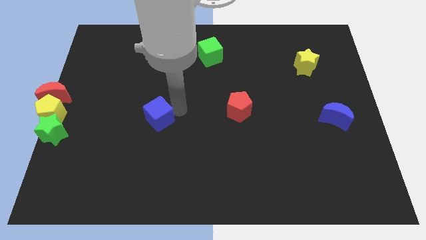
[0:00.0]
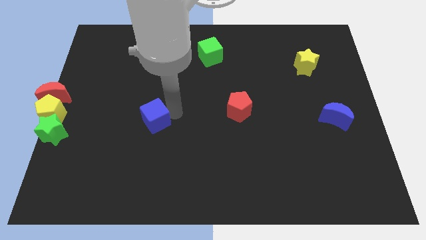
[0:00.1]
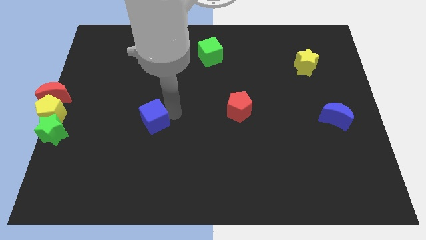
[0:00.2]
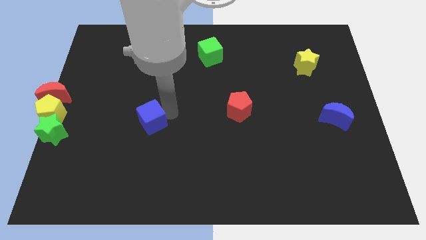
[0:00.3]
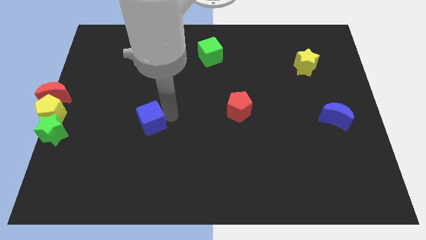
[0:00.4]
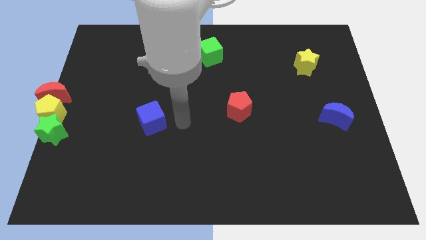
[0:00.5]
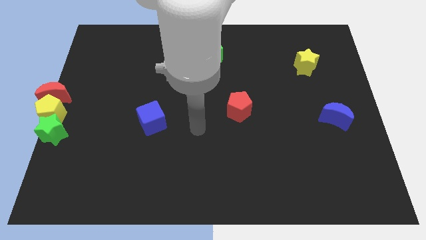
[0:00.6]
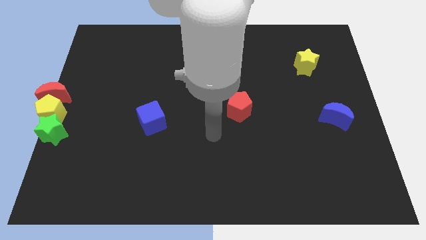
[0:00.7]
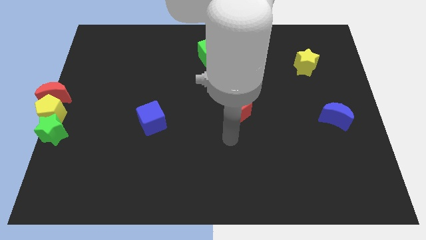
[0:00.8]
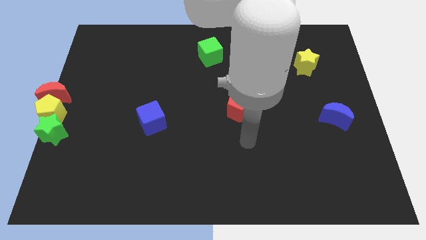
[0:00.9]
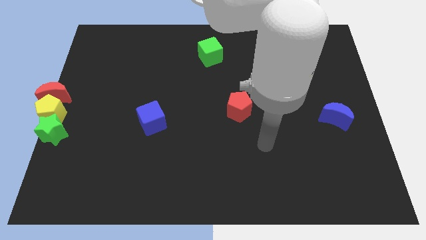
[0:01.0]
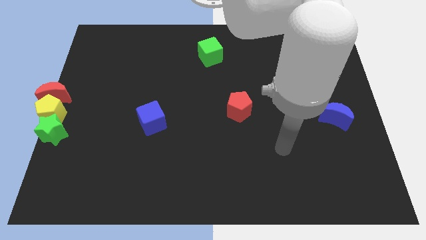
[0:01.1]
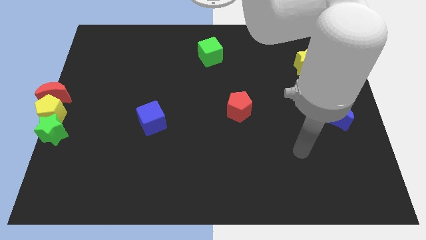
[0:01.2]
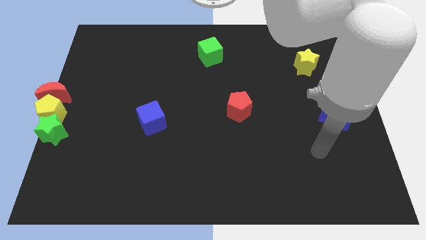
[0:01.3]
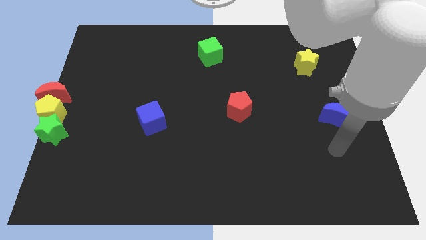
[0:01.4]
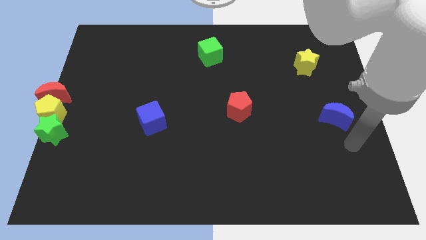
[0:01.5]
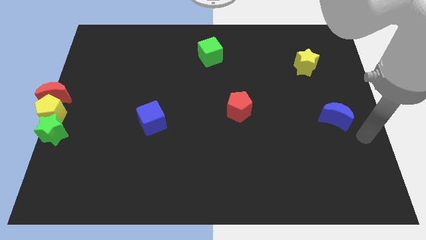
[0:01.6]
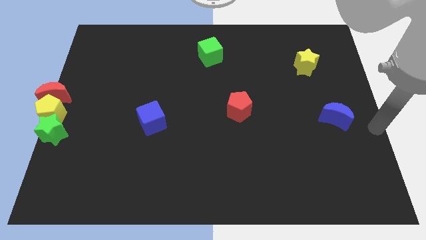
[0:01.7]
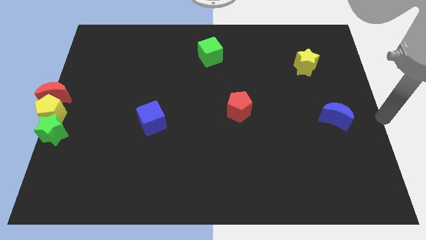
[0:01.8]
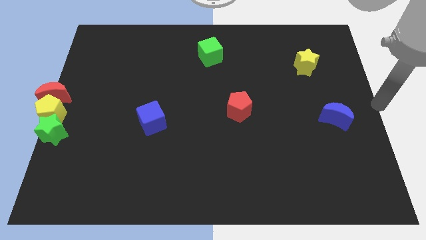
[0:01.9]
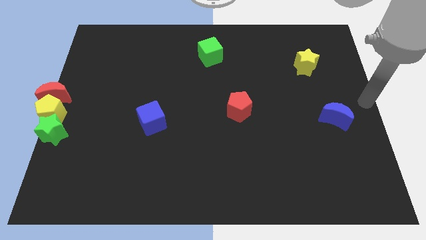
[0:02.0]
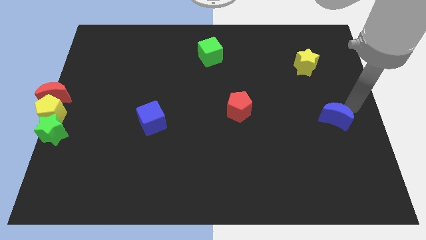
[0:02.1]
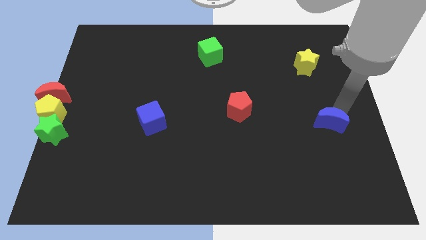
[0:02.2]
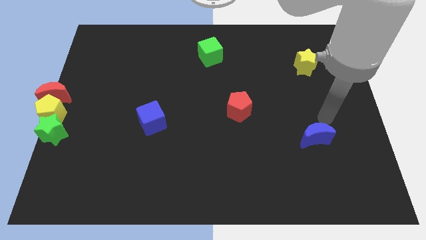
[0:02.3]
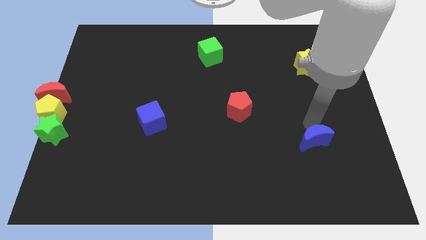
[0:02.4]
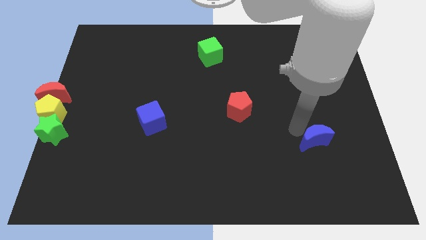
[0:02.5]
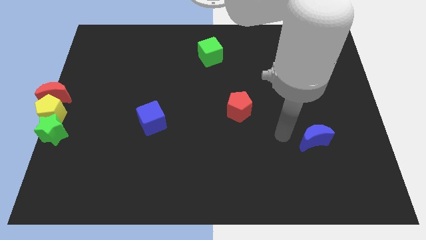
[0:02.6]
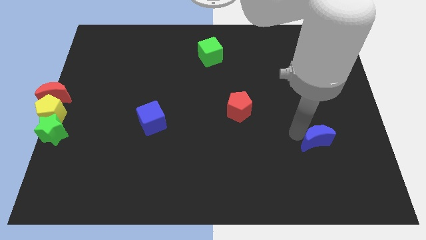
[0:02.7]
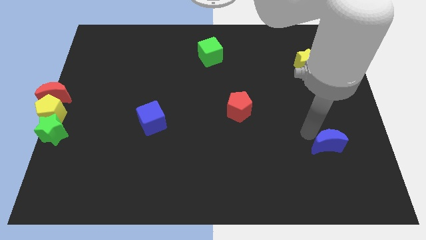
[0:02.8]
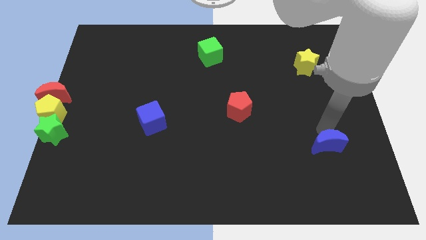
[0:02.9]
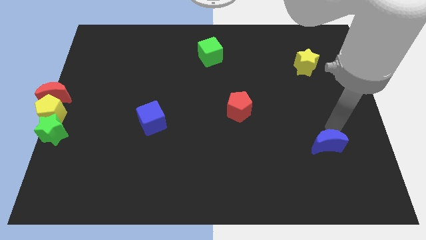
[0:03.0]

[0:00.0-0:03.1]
move the blue moon slightly downwards

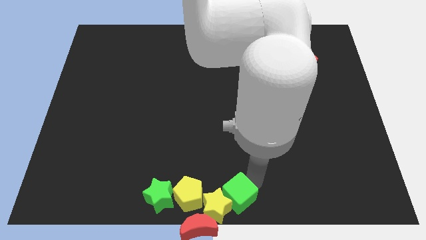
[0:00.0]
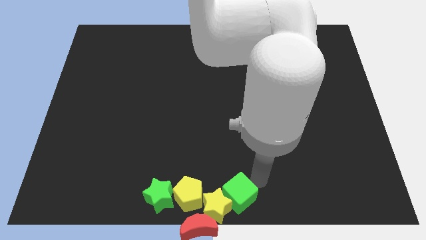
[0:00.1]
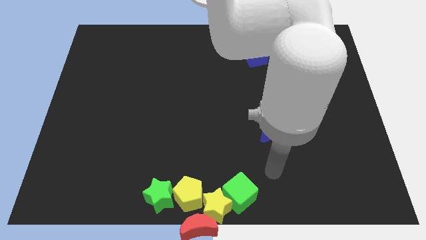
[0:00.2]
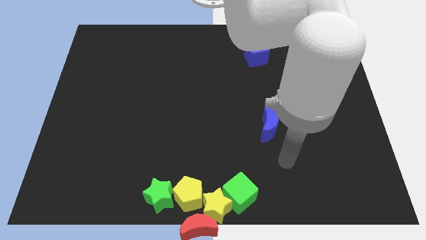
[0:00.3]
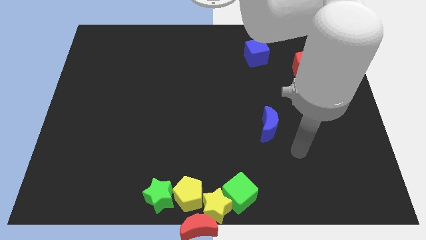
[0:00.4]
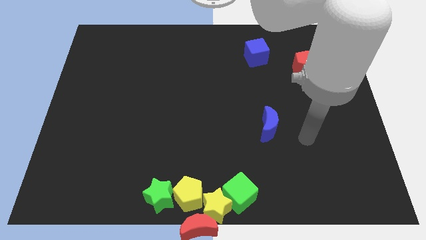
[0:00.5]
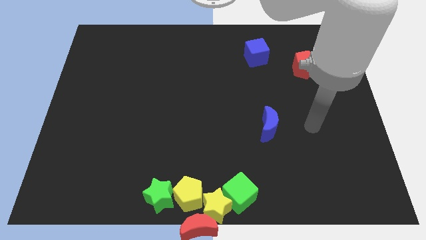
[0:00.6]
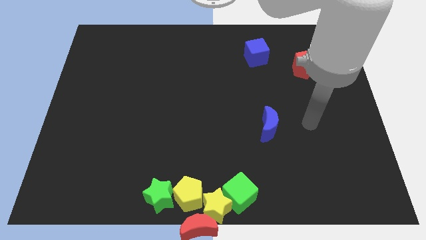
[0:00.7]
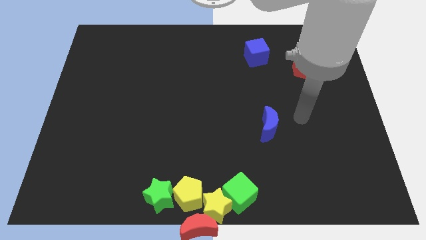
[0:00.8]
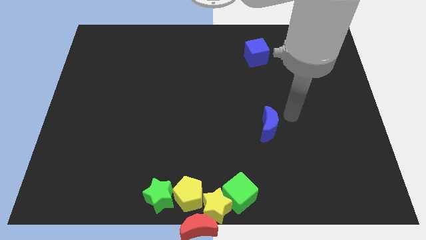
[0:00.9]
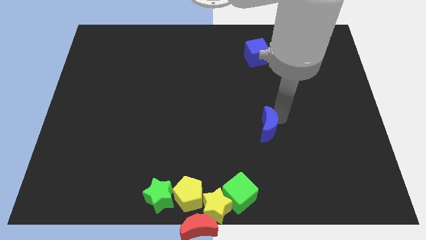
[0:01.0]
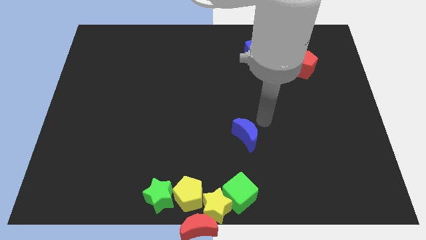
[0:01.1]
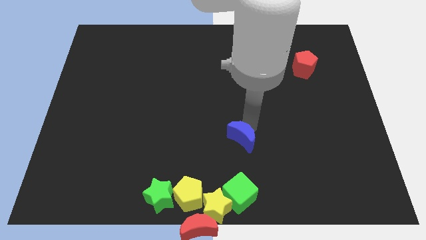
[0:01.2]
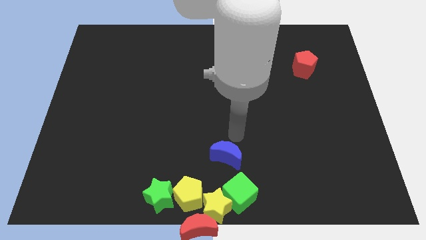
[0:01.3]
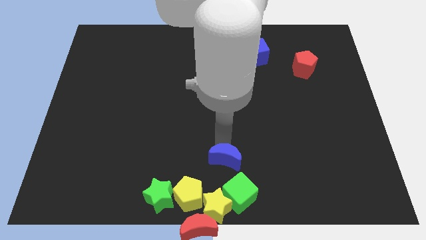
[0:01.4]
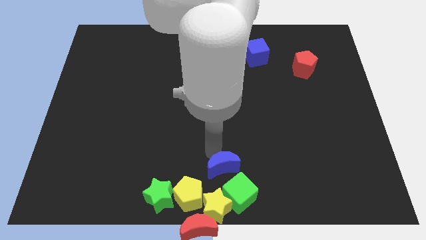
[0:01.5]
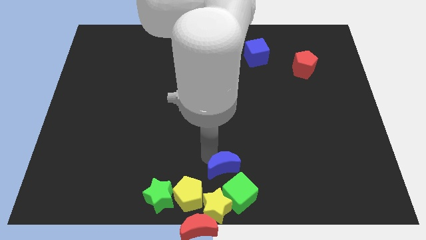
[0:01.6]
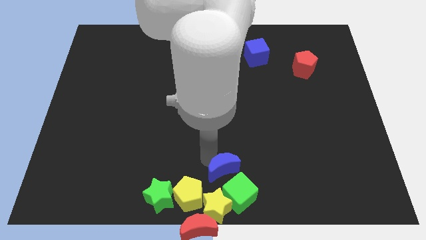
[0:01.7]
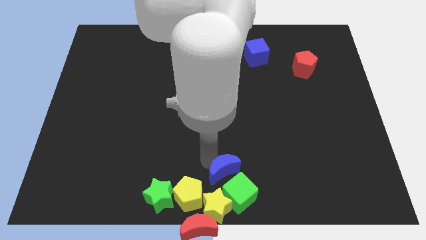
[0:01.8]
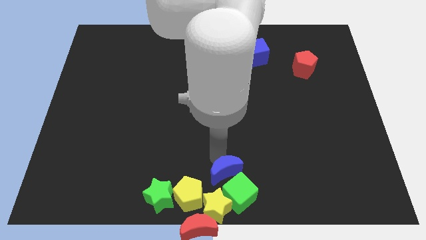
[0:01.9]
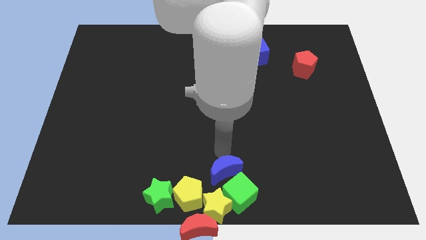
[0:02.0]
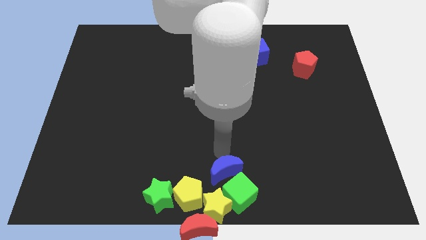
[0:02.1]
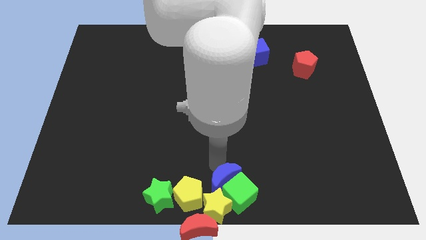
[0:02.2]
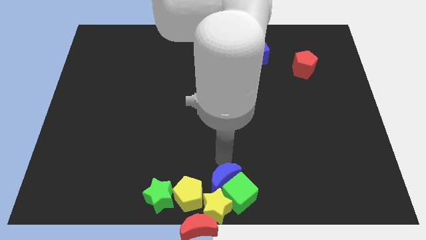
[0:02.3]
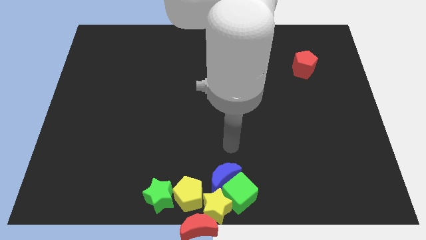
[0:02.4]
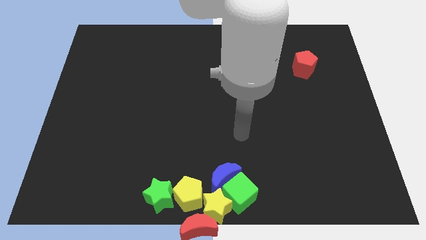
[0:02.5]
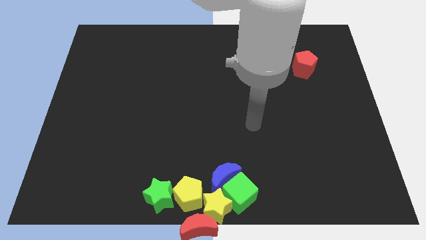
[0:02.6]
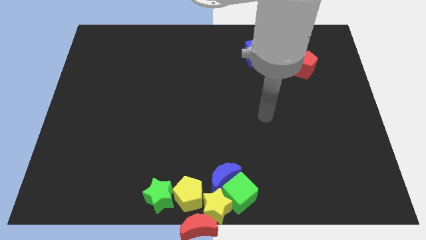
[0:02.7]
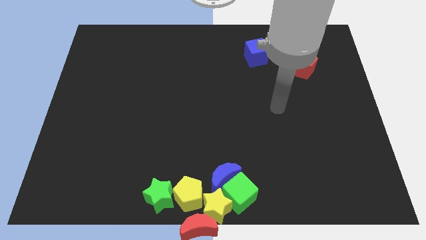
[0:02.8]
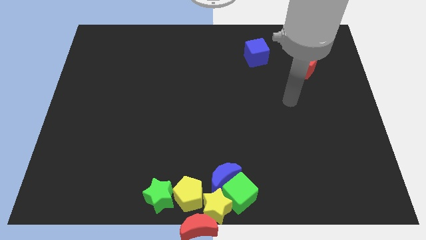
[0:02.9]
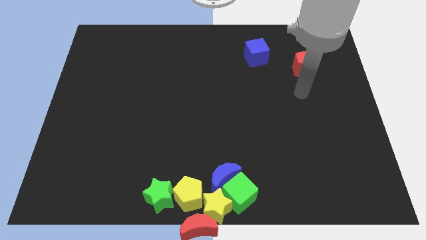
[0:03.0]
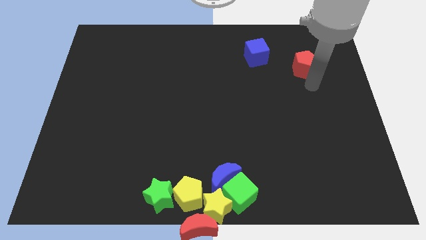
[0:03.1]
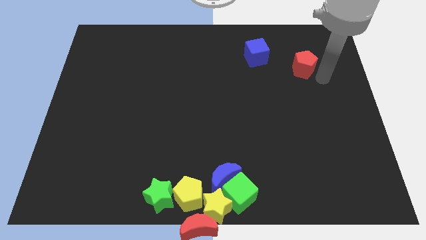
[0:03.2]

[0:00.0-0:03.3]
push the blue moon into the group of blocks

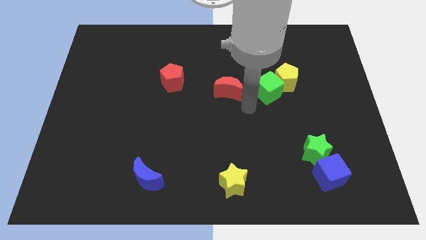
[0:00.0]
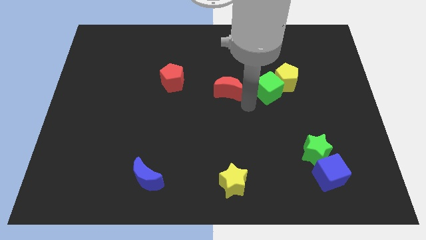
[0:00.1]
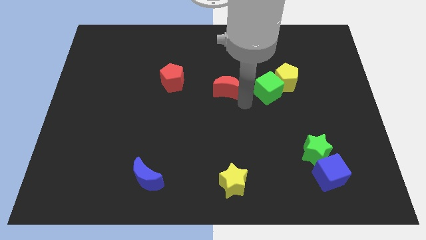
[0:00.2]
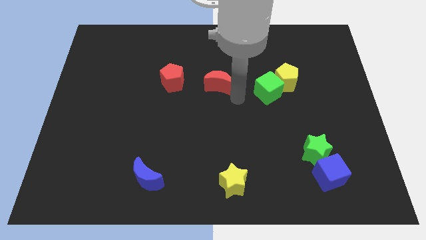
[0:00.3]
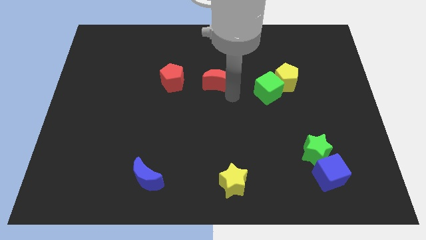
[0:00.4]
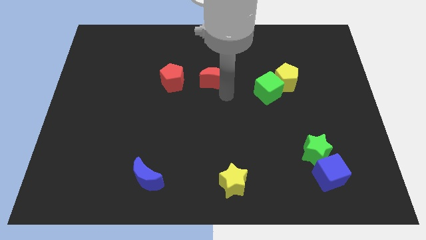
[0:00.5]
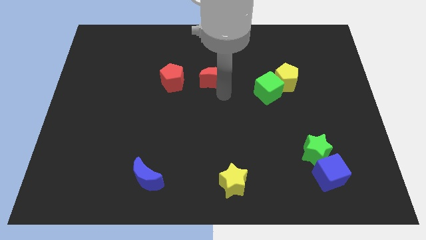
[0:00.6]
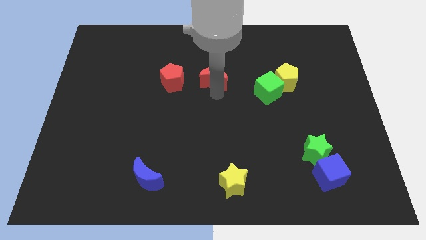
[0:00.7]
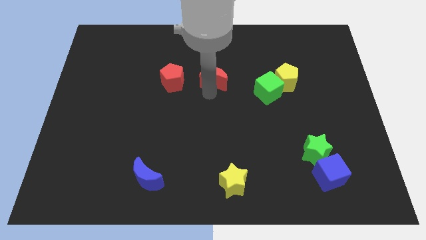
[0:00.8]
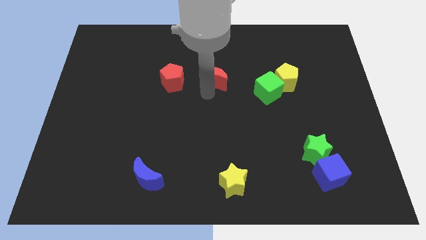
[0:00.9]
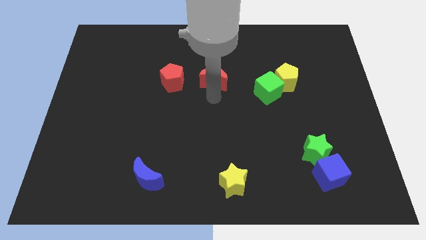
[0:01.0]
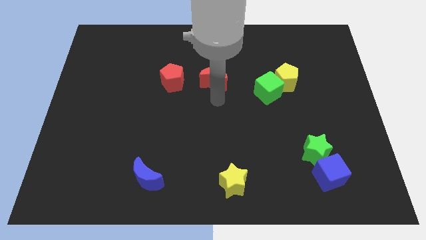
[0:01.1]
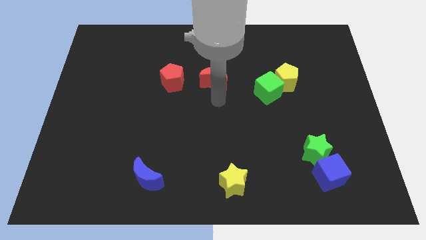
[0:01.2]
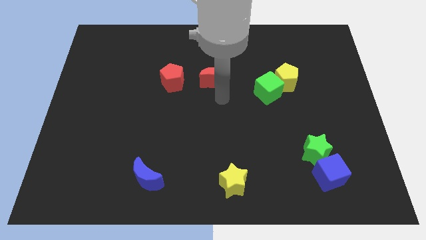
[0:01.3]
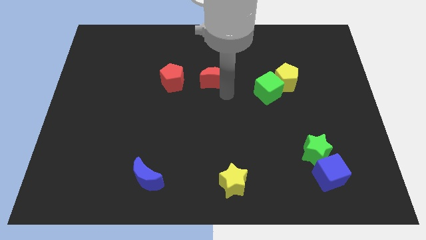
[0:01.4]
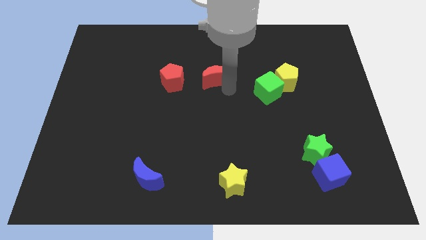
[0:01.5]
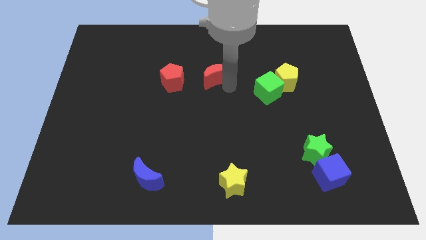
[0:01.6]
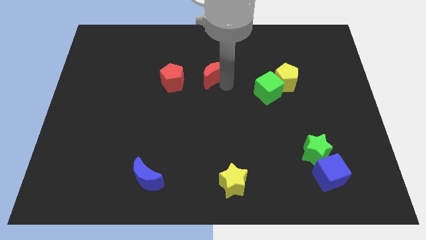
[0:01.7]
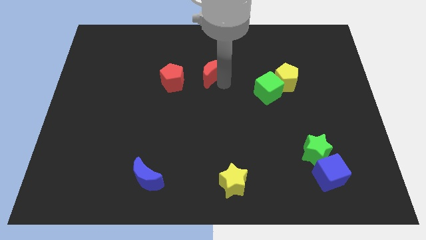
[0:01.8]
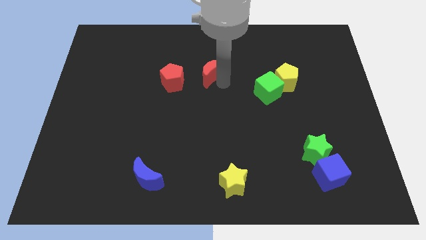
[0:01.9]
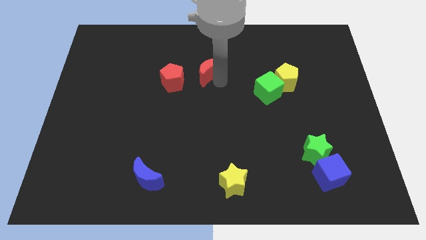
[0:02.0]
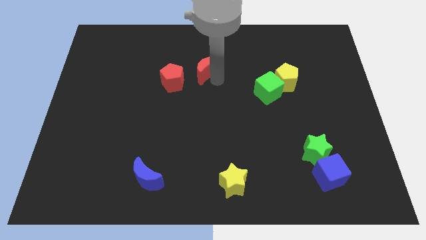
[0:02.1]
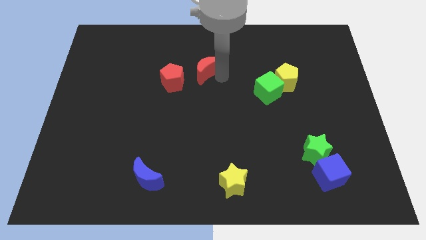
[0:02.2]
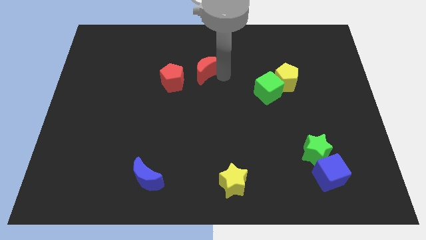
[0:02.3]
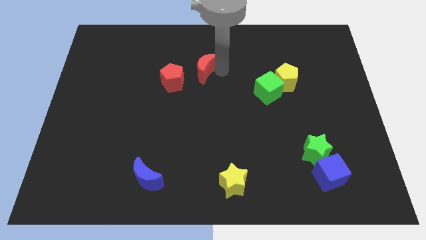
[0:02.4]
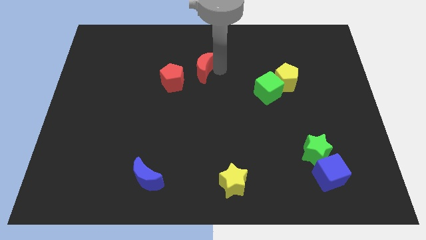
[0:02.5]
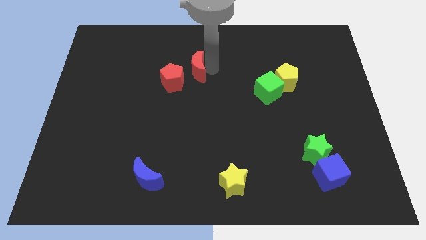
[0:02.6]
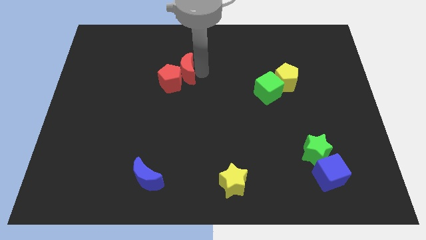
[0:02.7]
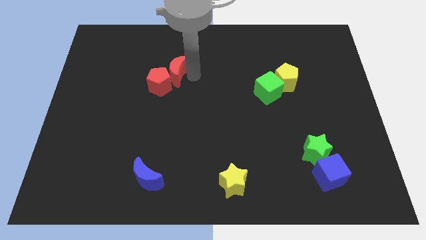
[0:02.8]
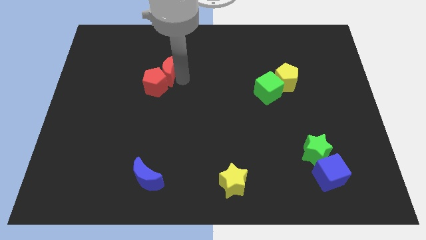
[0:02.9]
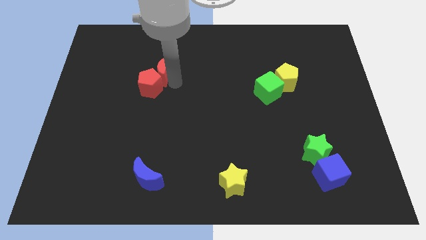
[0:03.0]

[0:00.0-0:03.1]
move red half moon into the red pentagon
